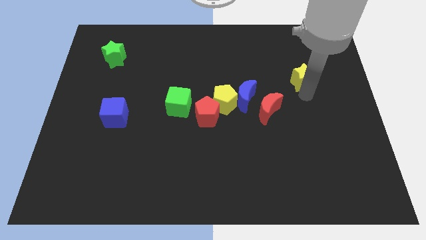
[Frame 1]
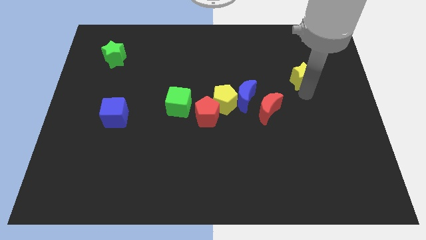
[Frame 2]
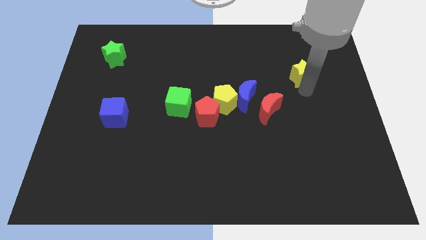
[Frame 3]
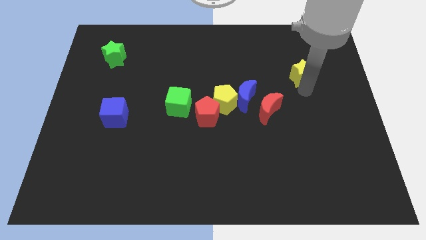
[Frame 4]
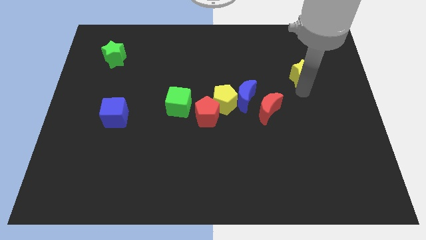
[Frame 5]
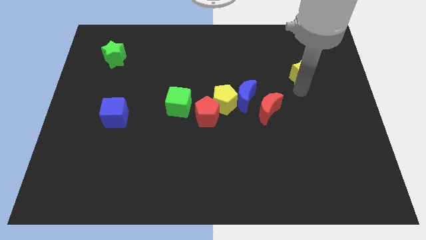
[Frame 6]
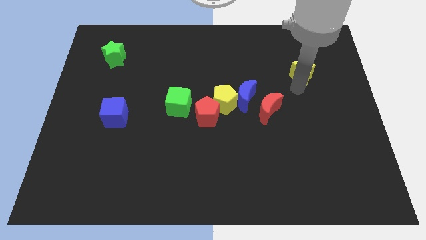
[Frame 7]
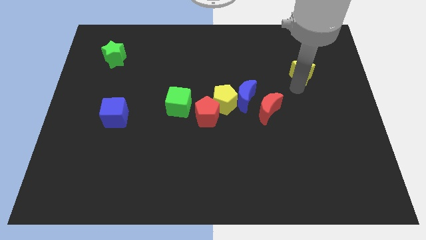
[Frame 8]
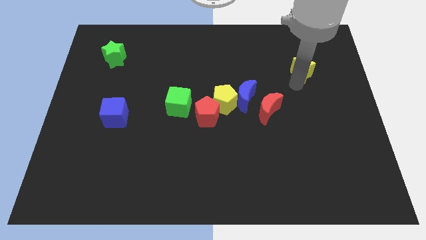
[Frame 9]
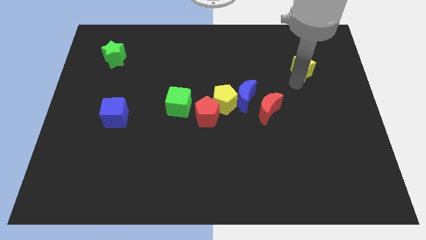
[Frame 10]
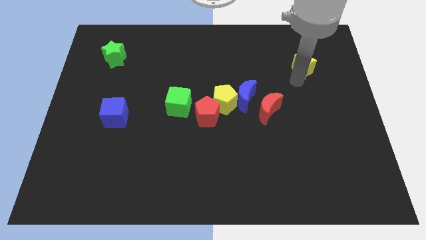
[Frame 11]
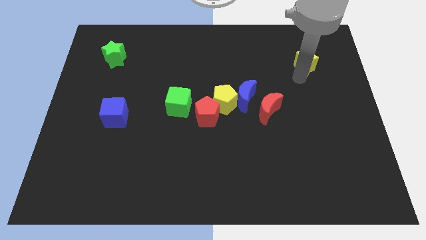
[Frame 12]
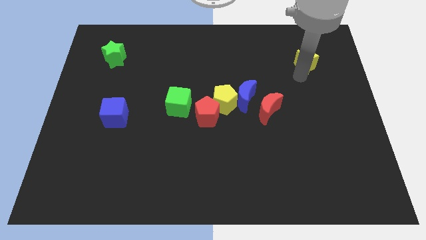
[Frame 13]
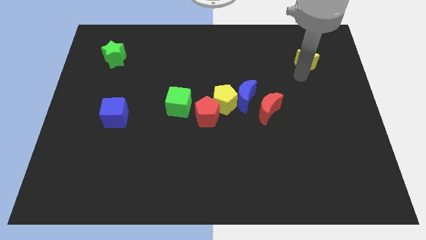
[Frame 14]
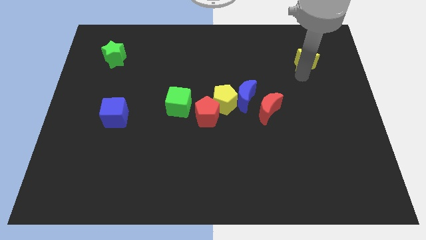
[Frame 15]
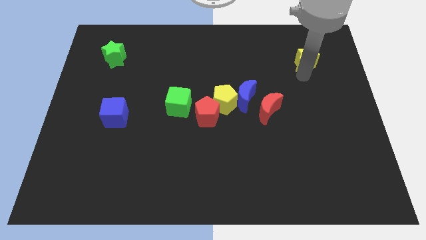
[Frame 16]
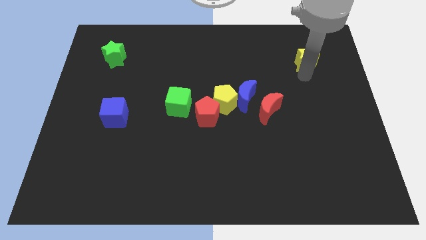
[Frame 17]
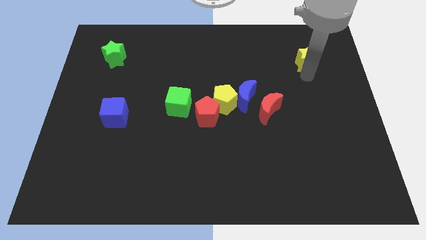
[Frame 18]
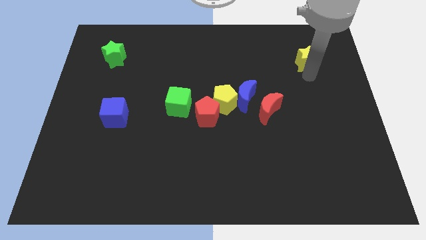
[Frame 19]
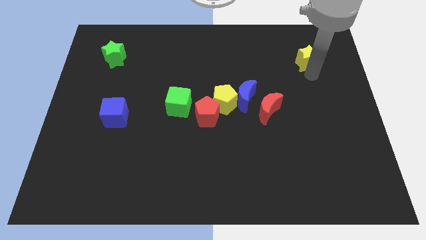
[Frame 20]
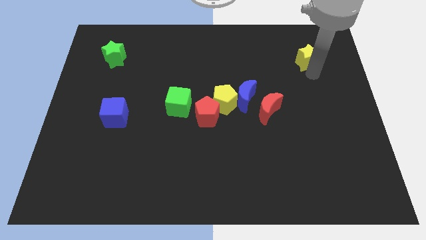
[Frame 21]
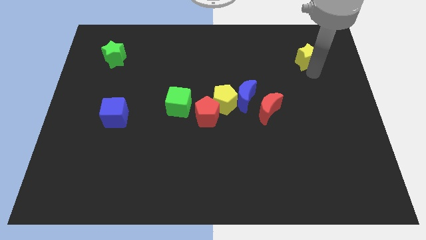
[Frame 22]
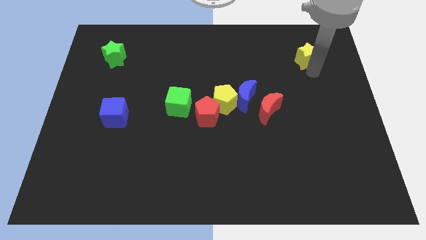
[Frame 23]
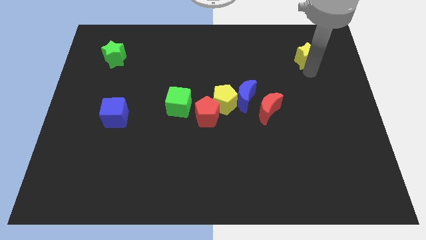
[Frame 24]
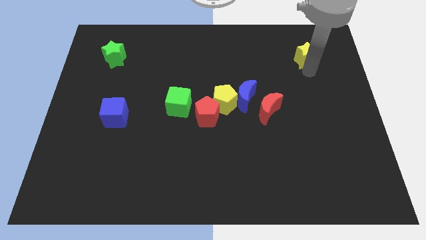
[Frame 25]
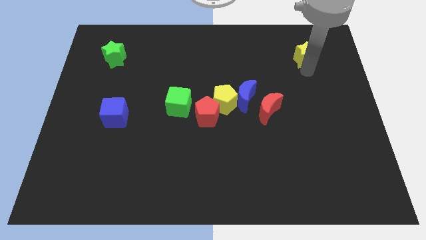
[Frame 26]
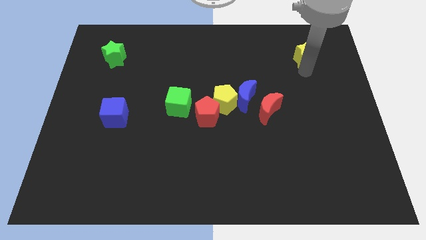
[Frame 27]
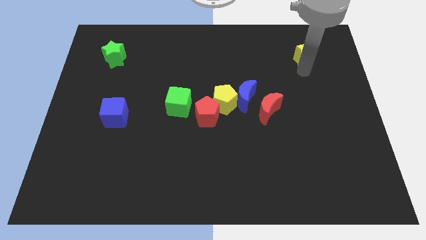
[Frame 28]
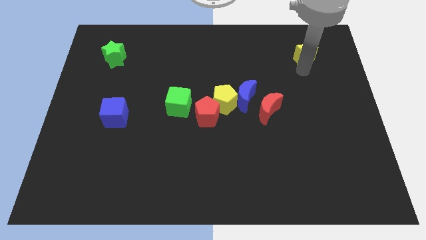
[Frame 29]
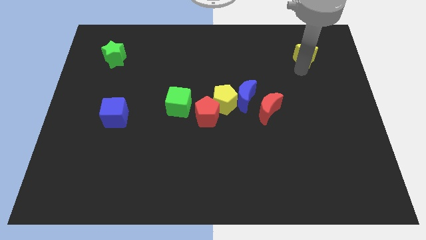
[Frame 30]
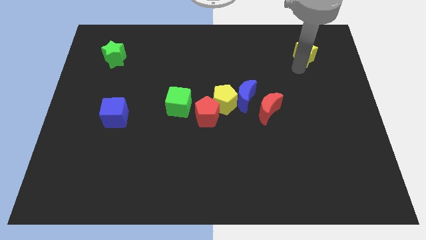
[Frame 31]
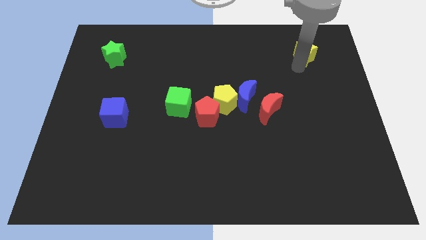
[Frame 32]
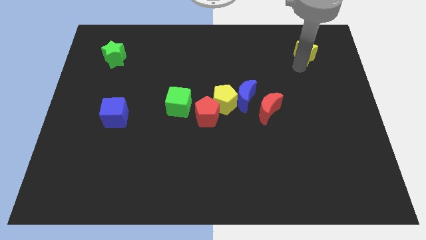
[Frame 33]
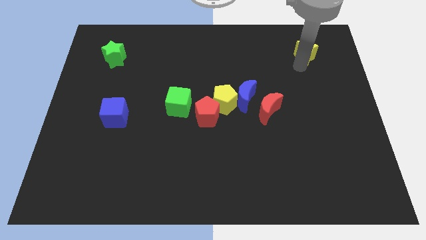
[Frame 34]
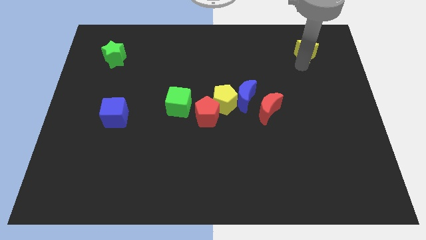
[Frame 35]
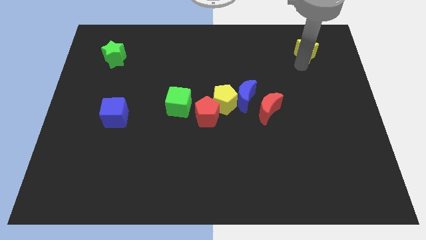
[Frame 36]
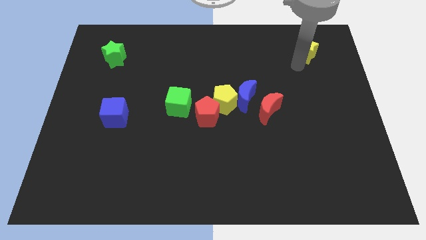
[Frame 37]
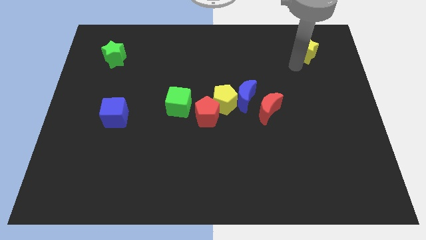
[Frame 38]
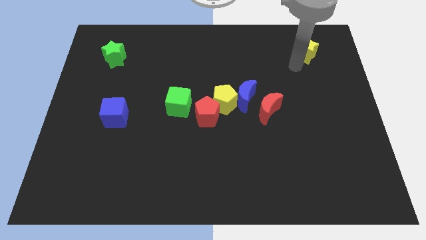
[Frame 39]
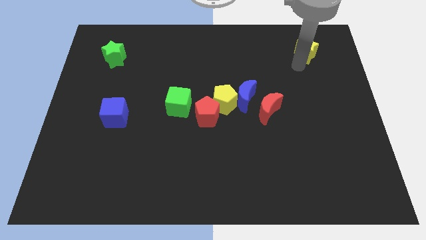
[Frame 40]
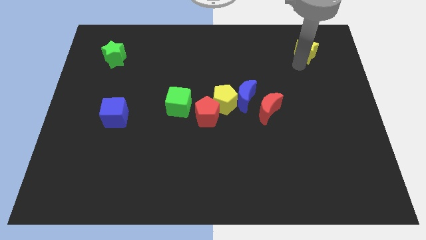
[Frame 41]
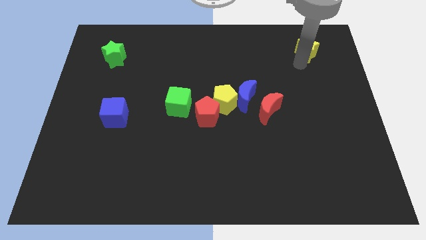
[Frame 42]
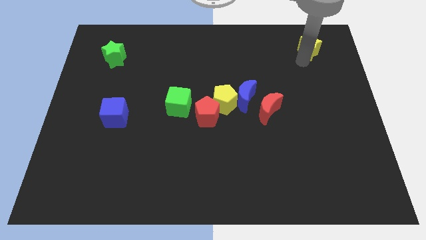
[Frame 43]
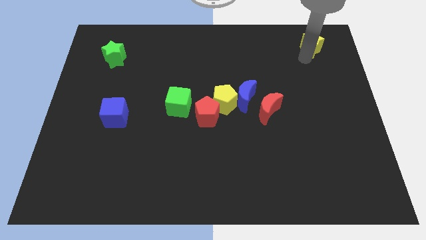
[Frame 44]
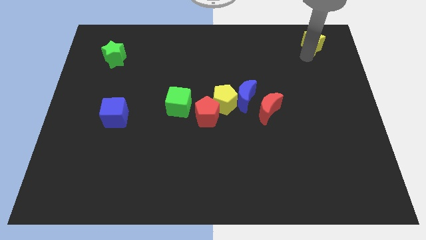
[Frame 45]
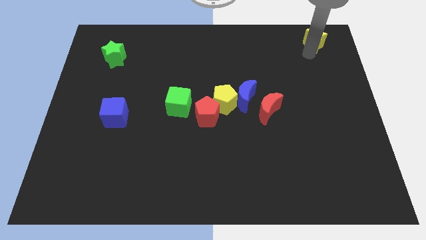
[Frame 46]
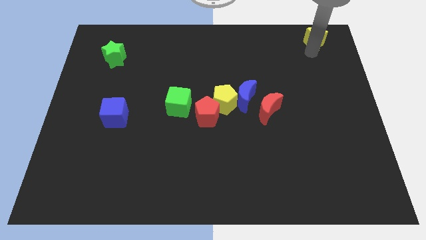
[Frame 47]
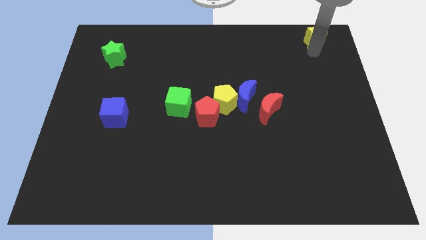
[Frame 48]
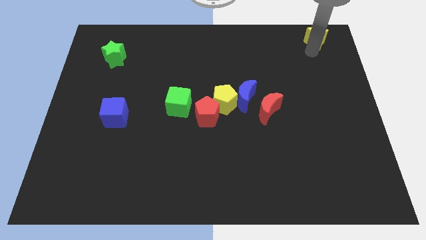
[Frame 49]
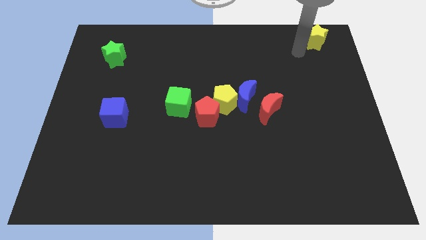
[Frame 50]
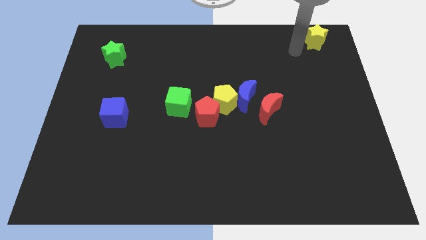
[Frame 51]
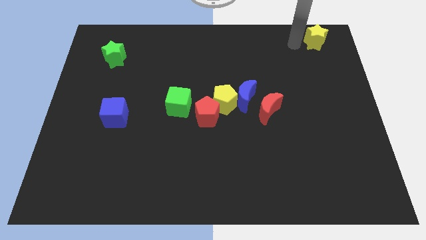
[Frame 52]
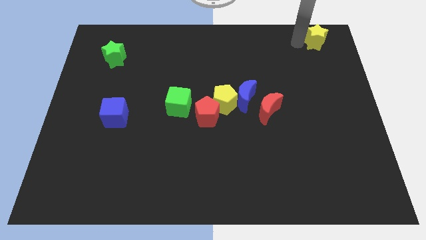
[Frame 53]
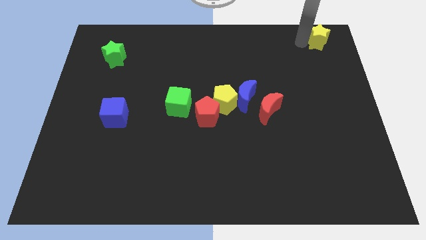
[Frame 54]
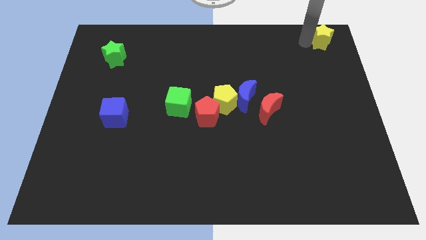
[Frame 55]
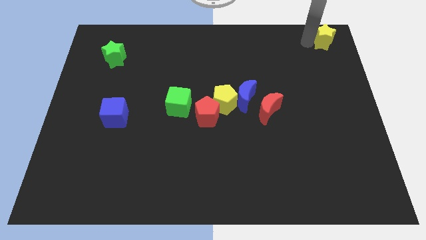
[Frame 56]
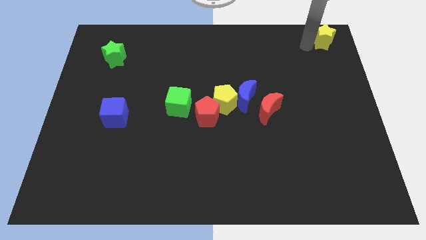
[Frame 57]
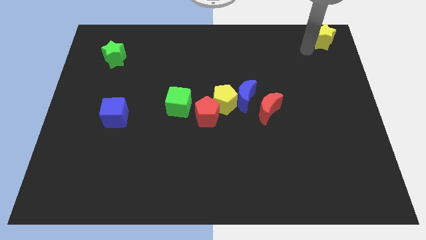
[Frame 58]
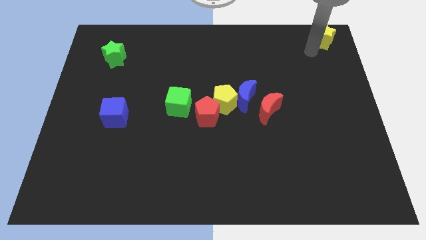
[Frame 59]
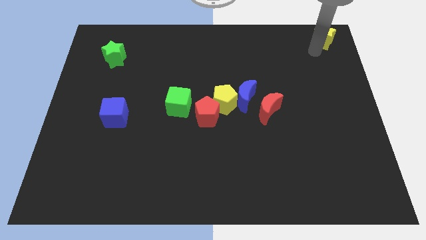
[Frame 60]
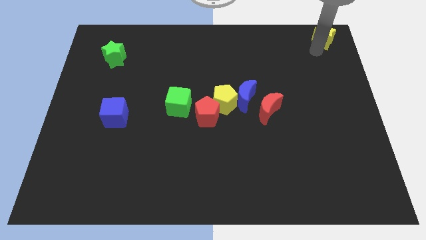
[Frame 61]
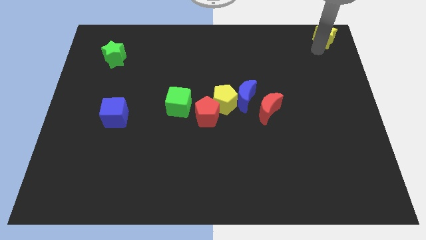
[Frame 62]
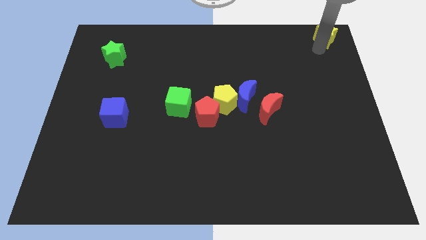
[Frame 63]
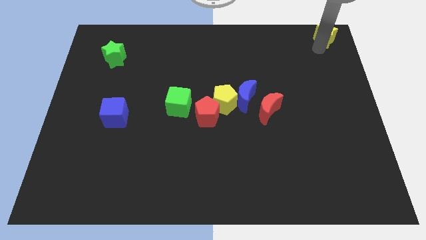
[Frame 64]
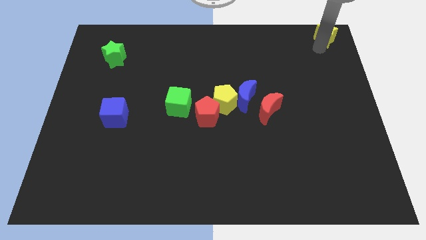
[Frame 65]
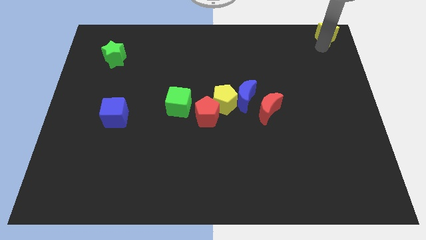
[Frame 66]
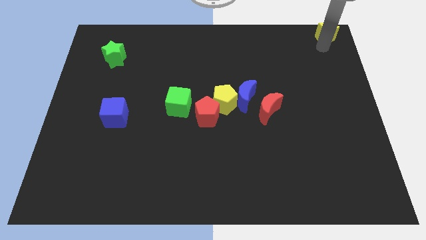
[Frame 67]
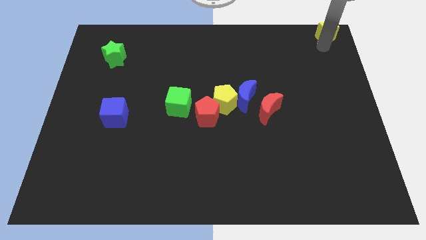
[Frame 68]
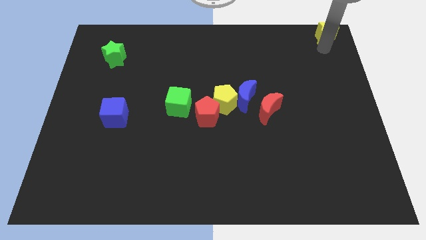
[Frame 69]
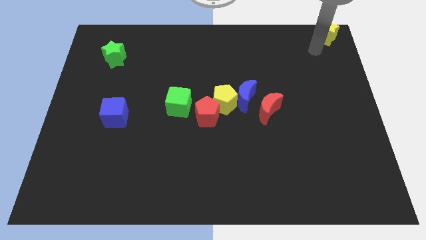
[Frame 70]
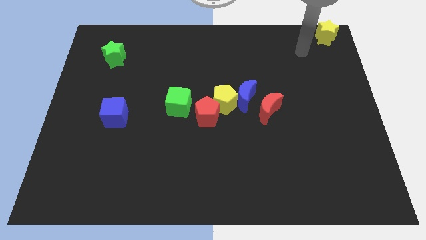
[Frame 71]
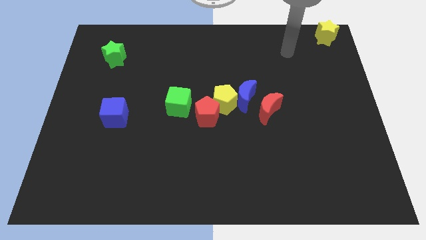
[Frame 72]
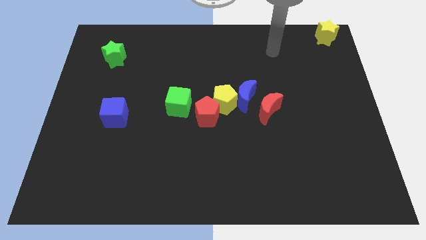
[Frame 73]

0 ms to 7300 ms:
push the yellow star towards the top right

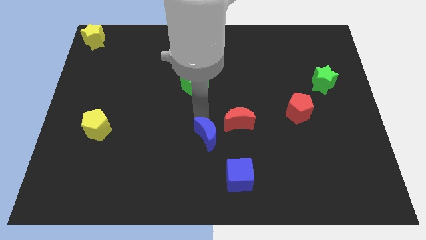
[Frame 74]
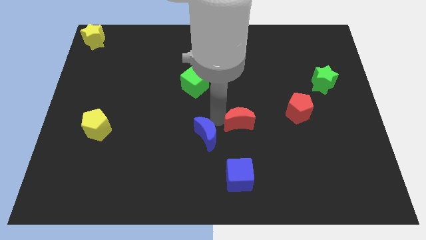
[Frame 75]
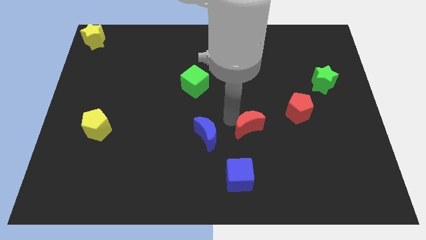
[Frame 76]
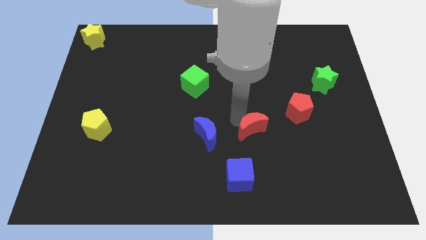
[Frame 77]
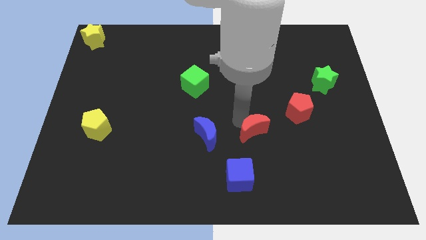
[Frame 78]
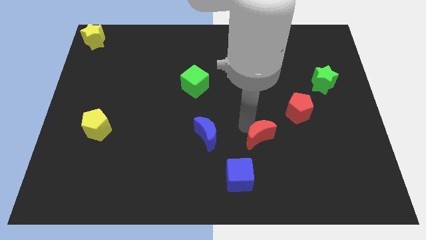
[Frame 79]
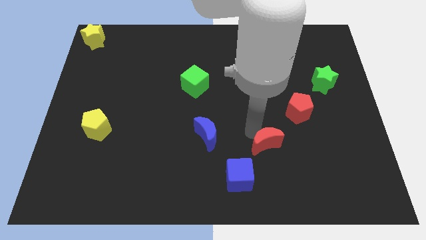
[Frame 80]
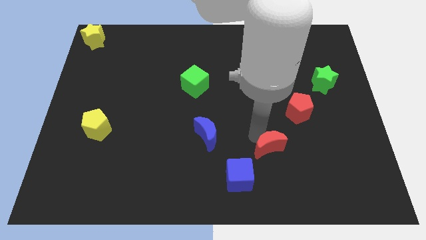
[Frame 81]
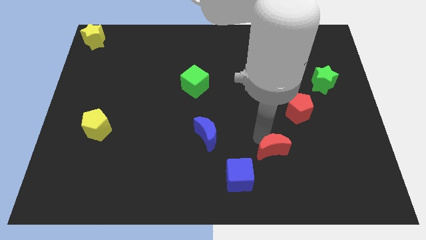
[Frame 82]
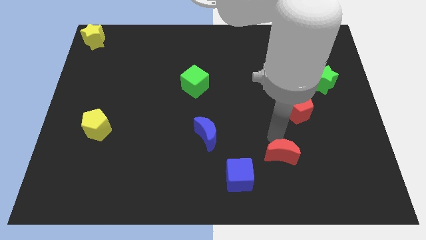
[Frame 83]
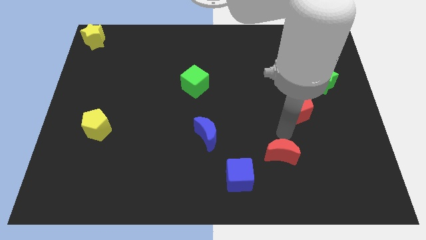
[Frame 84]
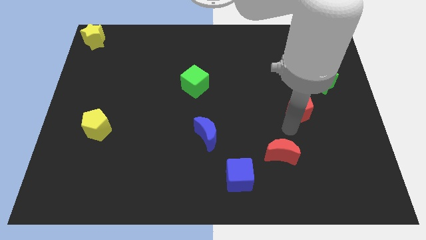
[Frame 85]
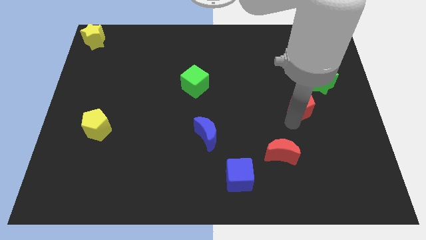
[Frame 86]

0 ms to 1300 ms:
push the red crescent slightly to the bottom

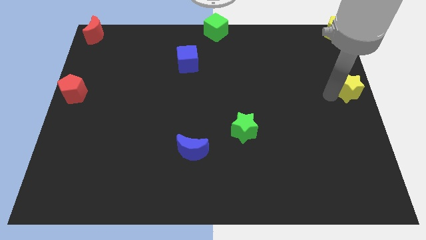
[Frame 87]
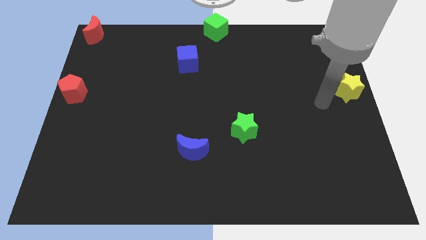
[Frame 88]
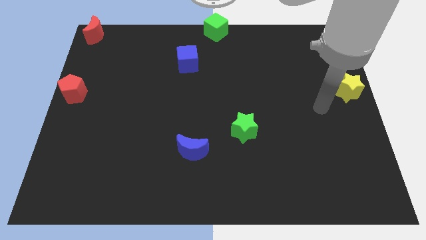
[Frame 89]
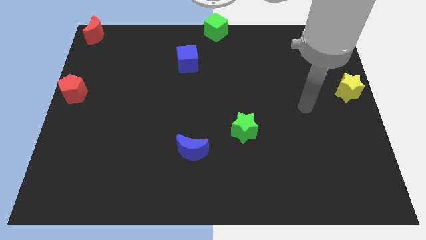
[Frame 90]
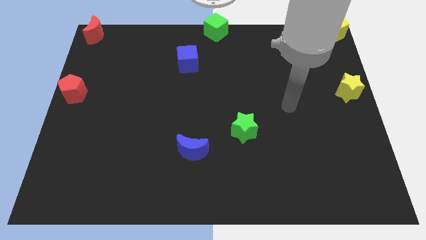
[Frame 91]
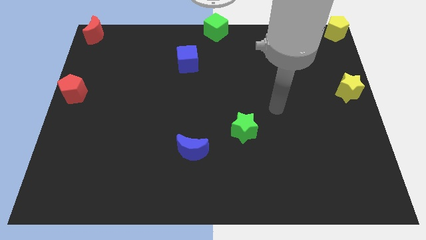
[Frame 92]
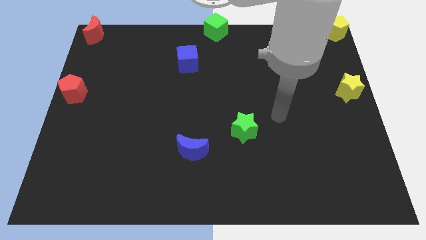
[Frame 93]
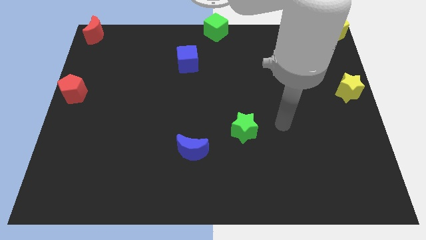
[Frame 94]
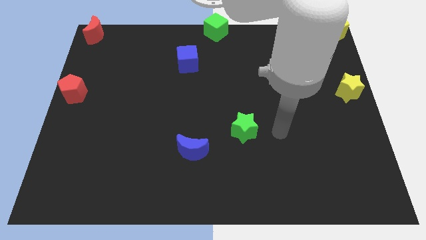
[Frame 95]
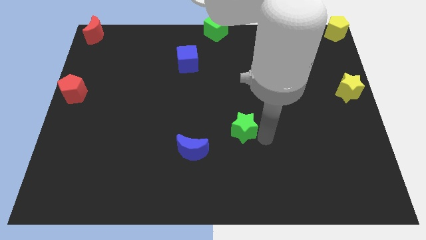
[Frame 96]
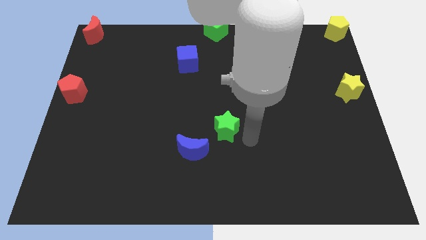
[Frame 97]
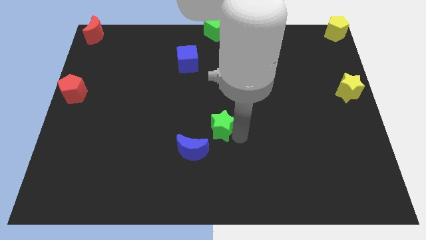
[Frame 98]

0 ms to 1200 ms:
move the arm away from the yellow star
